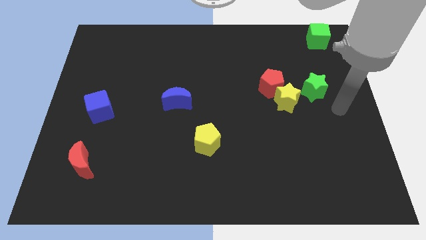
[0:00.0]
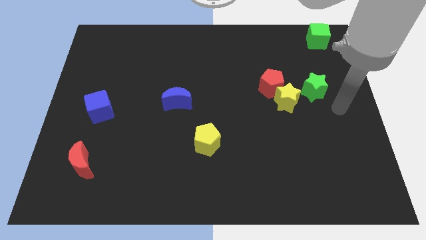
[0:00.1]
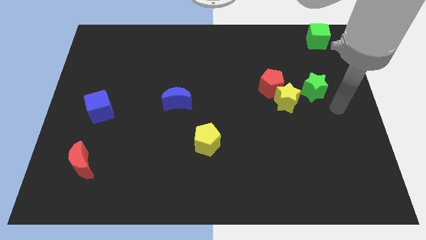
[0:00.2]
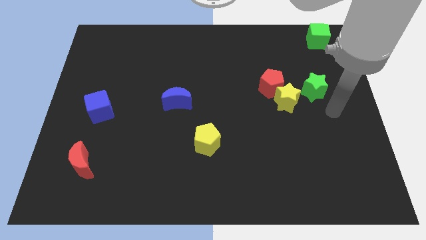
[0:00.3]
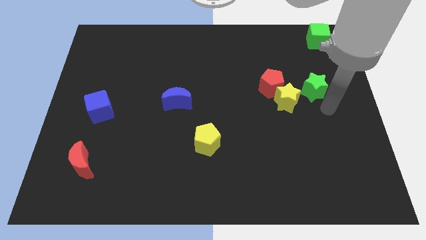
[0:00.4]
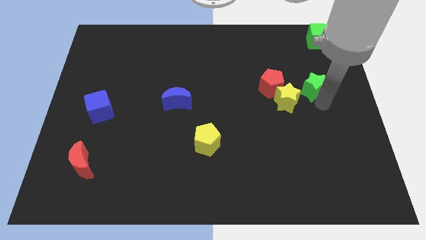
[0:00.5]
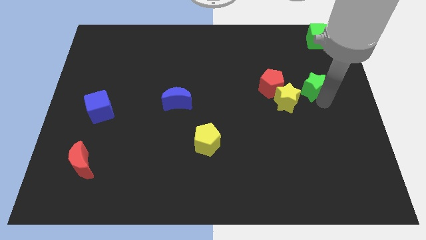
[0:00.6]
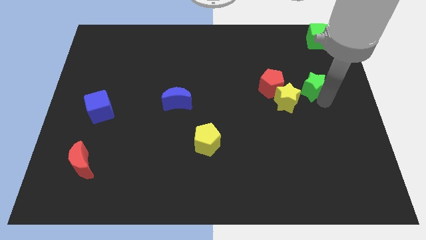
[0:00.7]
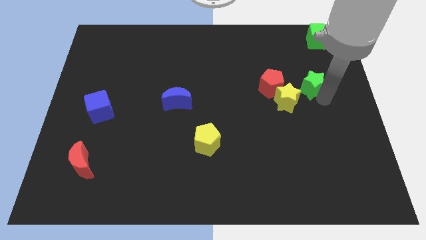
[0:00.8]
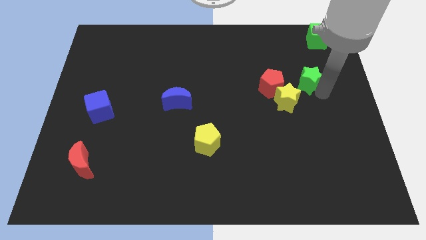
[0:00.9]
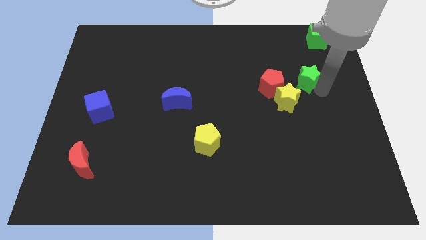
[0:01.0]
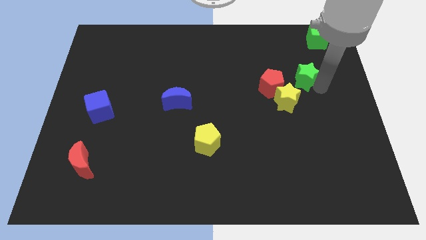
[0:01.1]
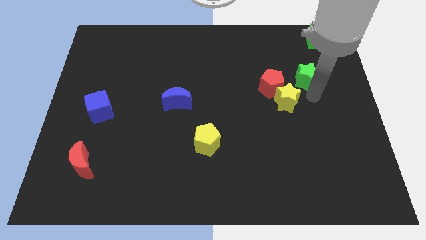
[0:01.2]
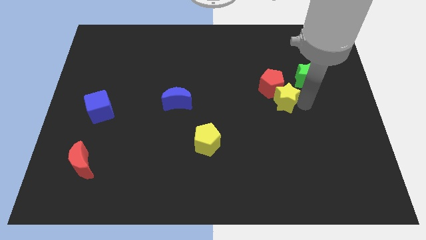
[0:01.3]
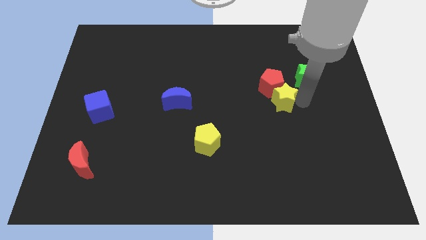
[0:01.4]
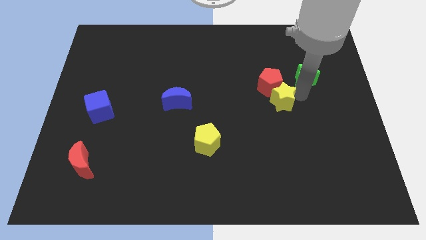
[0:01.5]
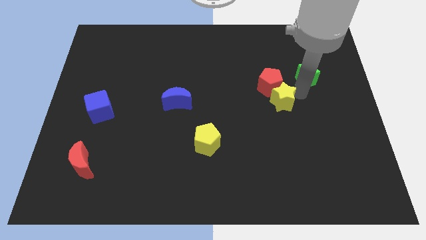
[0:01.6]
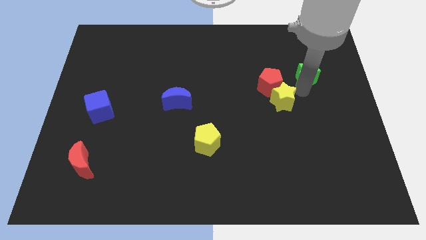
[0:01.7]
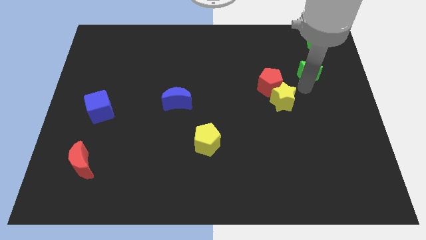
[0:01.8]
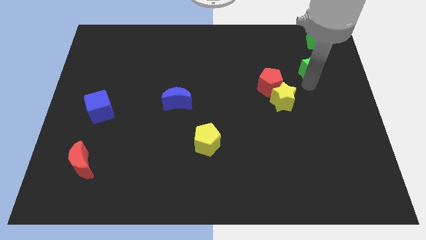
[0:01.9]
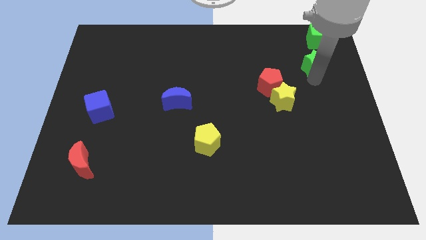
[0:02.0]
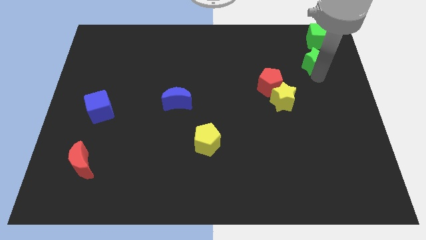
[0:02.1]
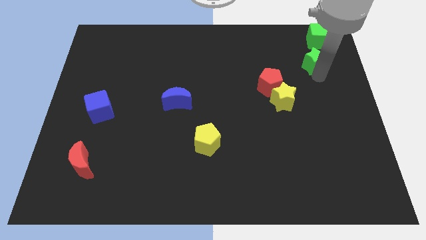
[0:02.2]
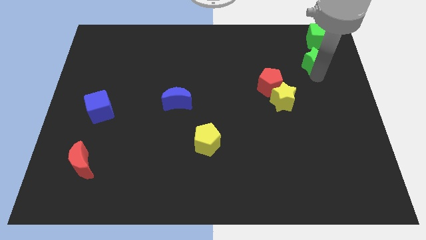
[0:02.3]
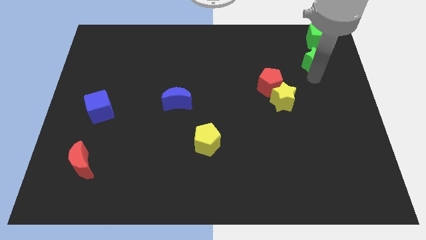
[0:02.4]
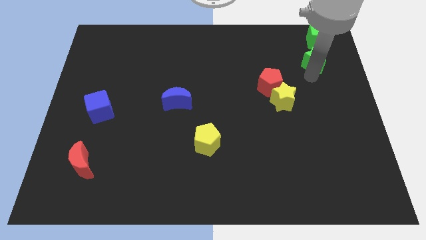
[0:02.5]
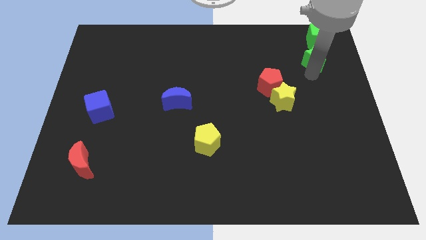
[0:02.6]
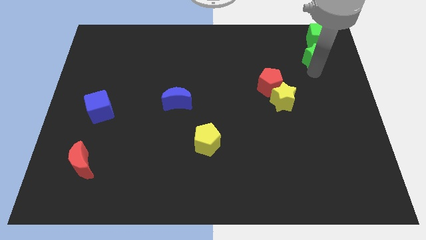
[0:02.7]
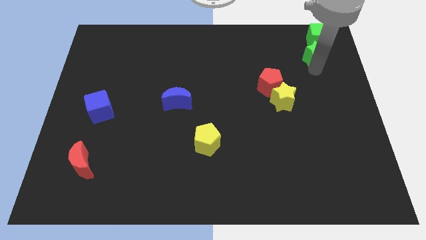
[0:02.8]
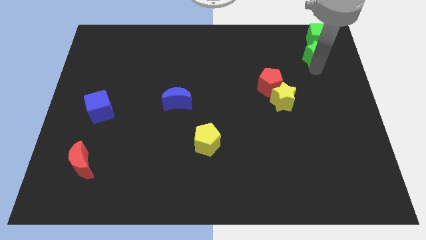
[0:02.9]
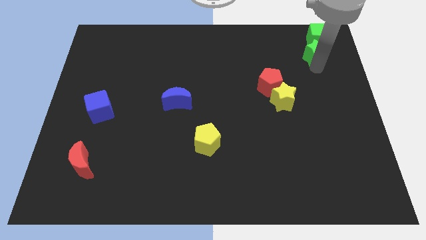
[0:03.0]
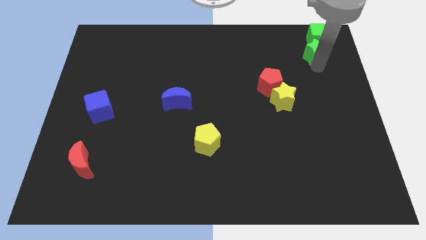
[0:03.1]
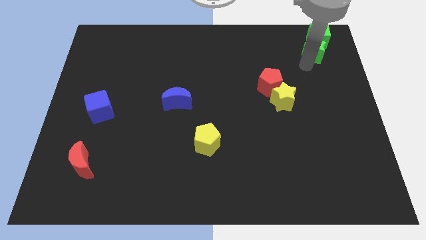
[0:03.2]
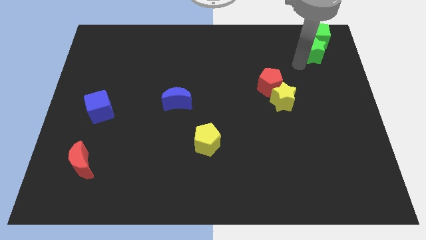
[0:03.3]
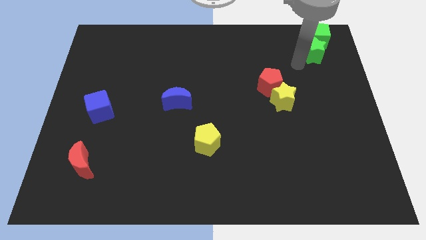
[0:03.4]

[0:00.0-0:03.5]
move the green star below the green cube

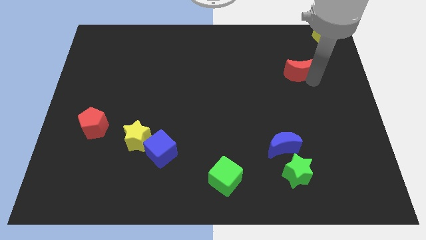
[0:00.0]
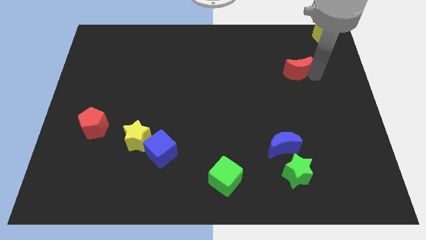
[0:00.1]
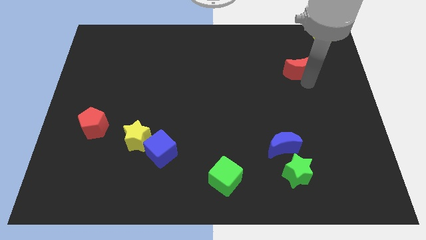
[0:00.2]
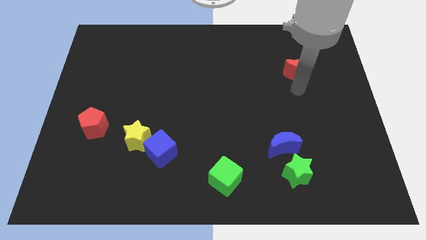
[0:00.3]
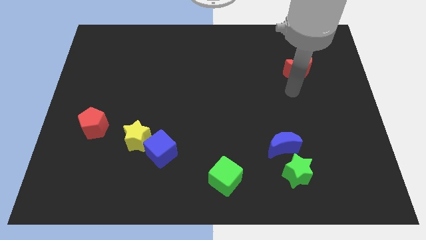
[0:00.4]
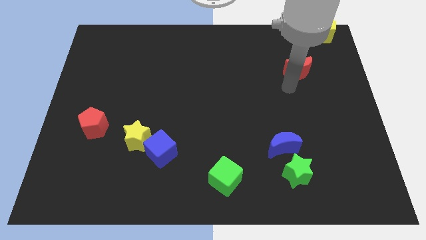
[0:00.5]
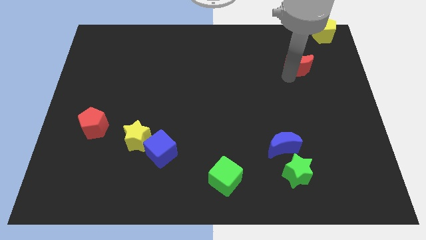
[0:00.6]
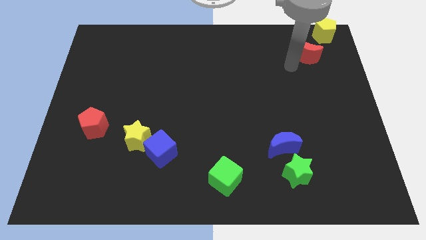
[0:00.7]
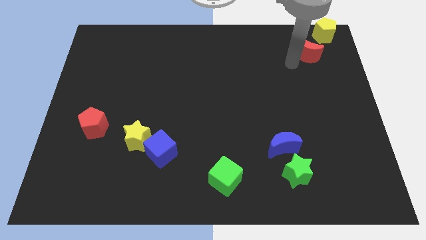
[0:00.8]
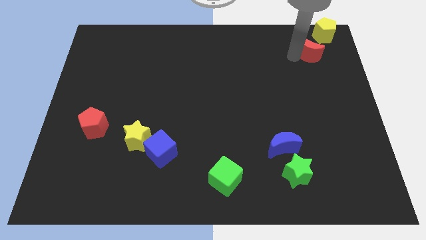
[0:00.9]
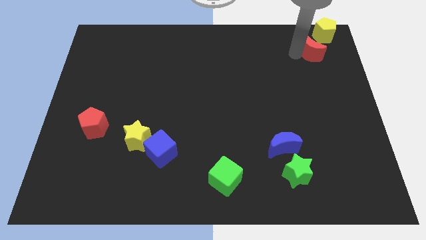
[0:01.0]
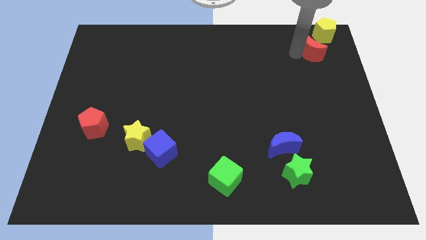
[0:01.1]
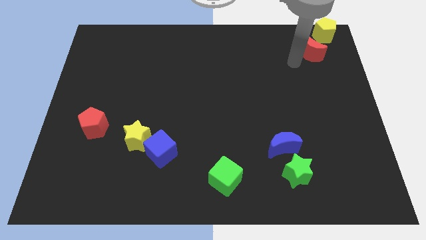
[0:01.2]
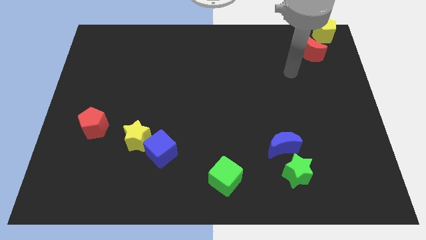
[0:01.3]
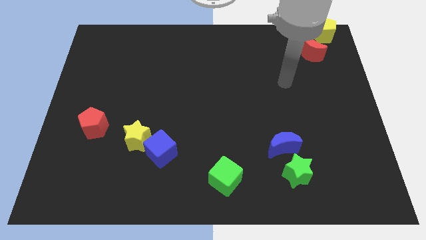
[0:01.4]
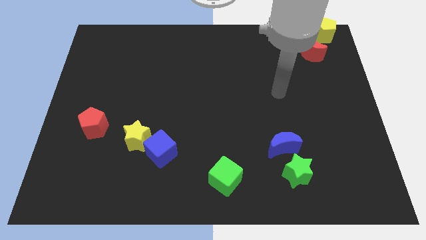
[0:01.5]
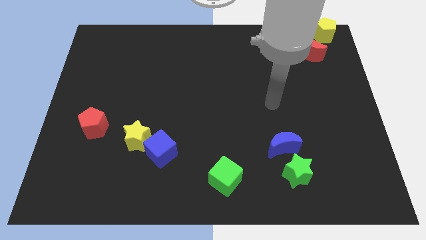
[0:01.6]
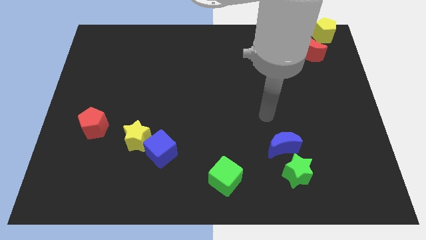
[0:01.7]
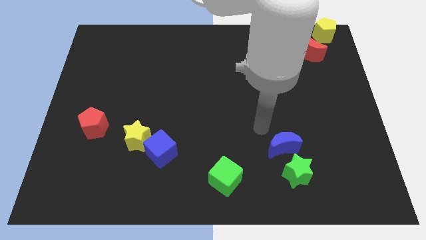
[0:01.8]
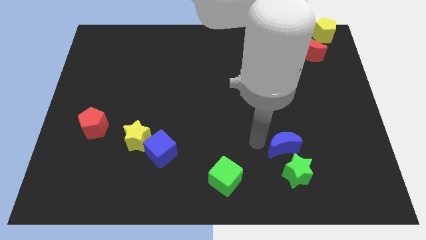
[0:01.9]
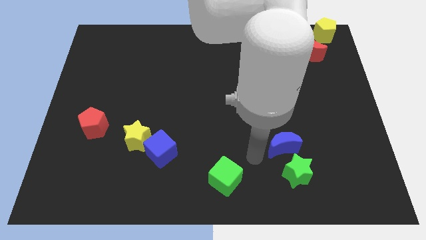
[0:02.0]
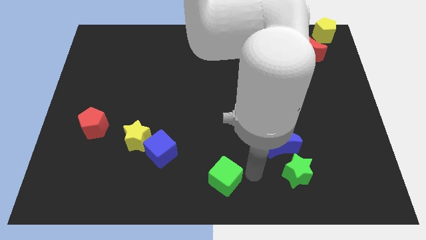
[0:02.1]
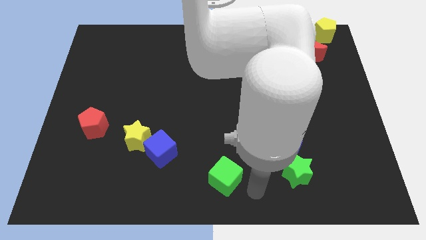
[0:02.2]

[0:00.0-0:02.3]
move red moon near yellow pentagon

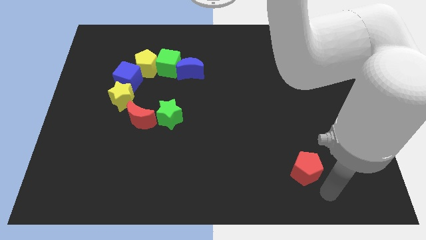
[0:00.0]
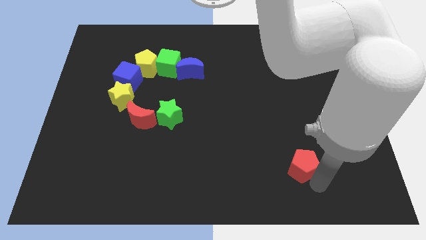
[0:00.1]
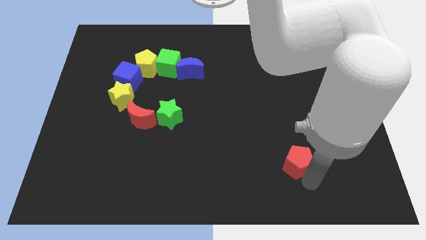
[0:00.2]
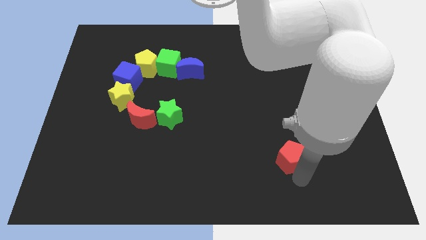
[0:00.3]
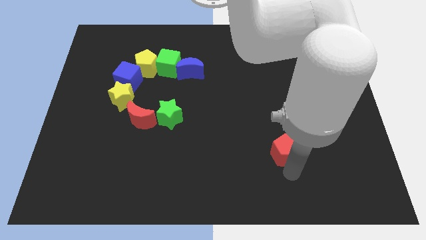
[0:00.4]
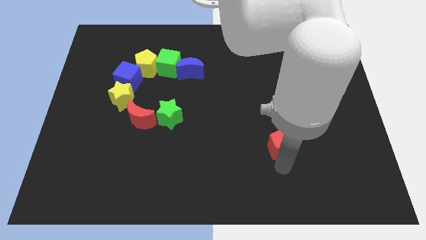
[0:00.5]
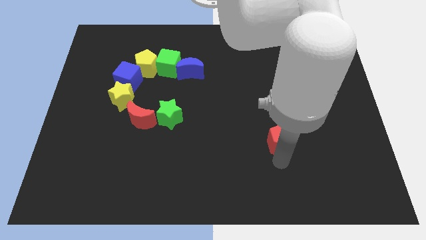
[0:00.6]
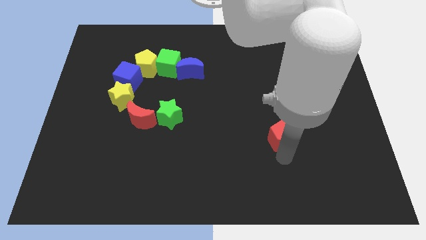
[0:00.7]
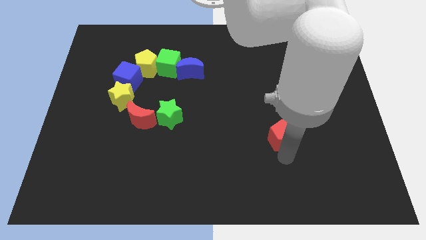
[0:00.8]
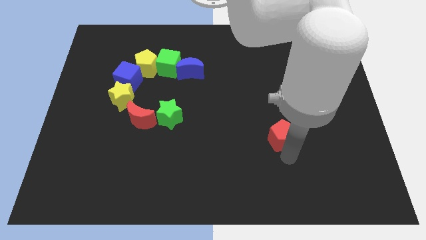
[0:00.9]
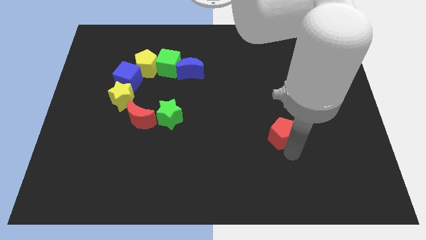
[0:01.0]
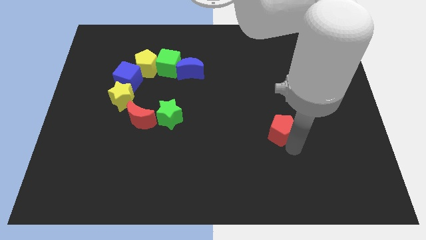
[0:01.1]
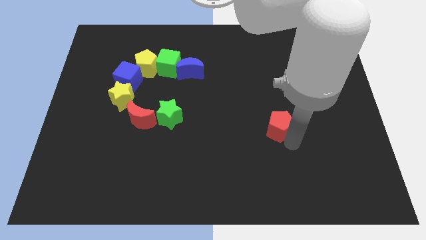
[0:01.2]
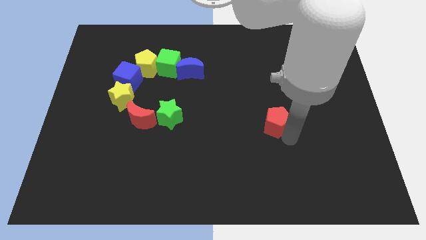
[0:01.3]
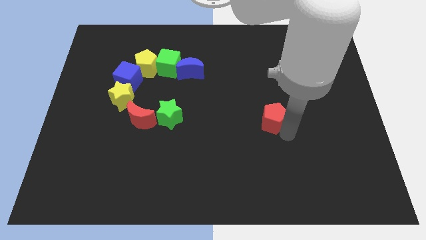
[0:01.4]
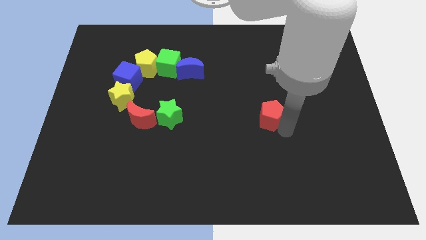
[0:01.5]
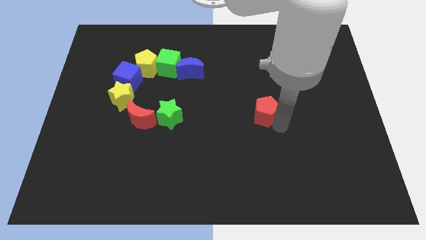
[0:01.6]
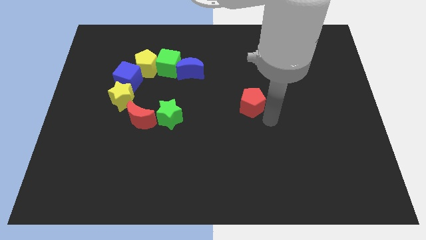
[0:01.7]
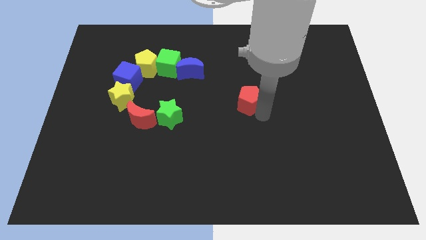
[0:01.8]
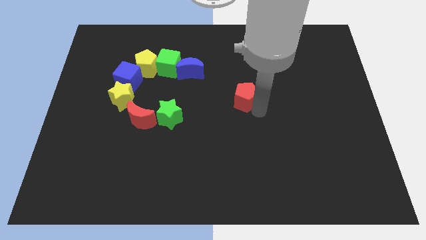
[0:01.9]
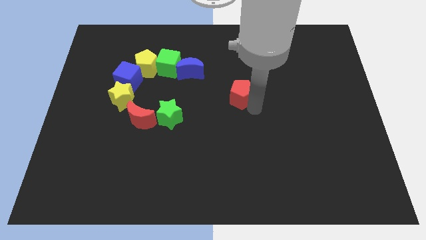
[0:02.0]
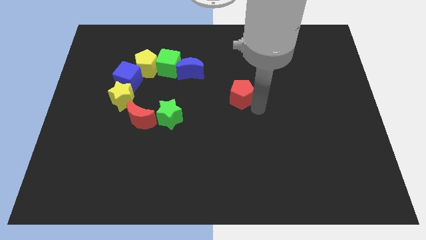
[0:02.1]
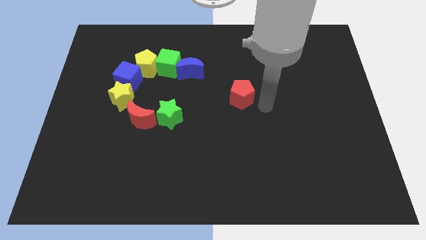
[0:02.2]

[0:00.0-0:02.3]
place the red pentagon to the center

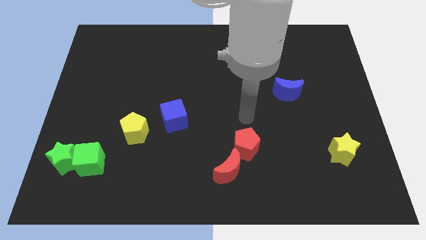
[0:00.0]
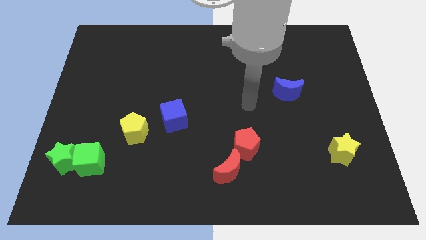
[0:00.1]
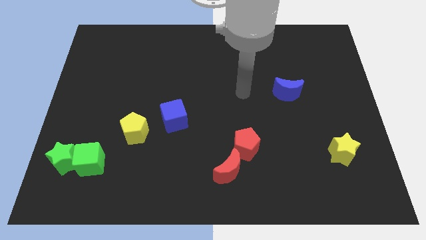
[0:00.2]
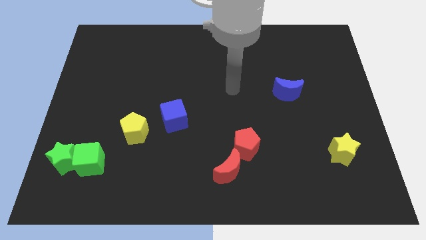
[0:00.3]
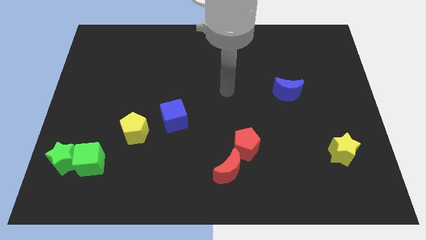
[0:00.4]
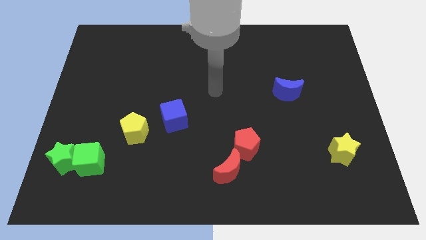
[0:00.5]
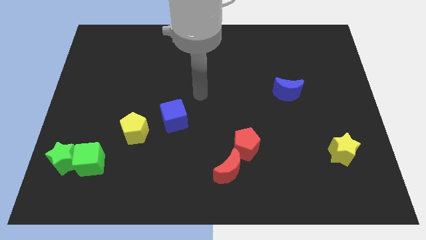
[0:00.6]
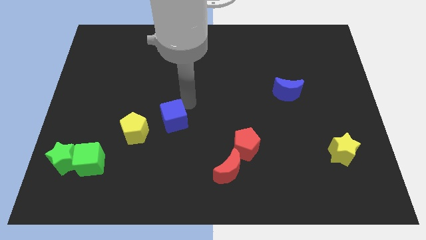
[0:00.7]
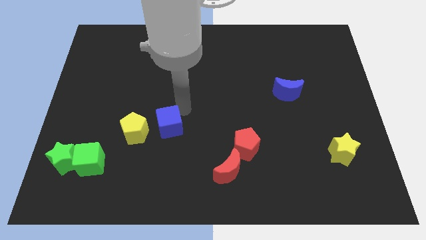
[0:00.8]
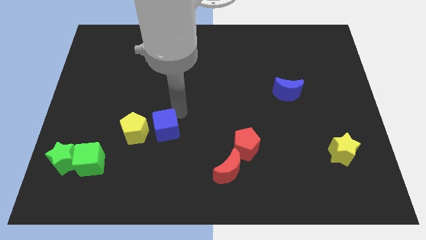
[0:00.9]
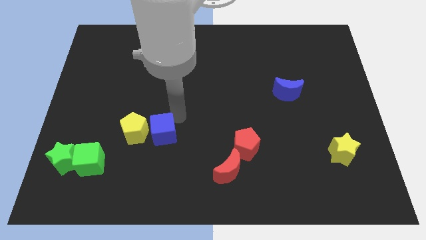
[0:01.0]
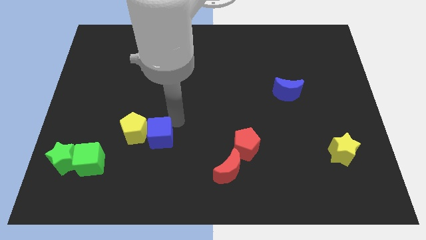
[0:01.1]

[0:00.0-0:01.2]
push the blue cube to the right of the yellow pentagon
